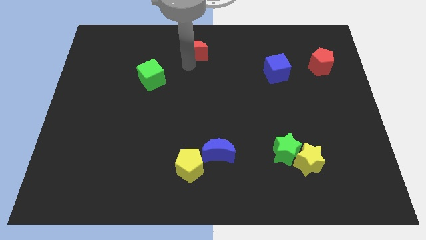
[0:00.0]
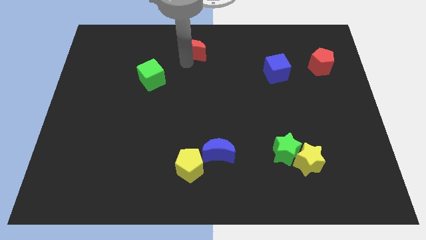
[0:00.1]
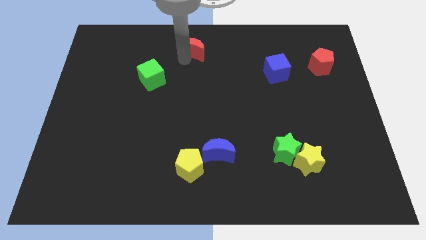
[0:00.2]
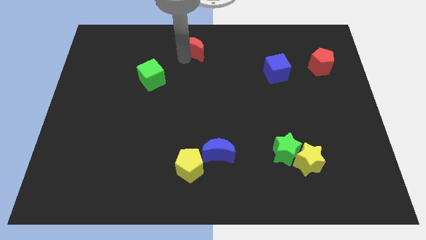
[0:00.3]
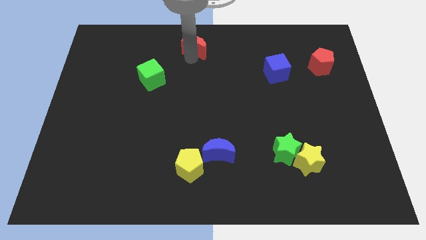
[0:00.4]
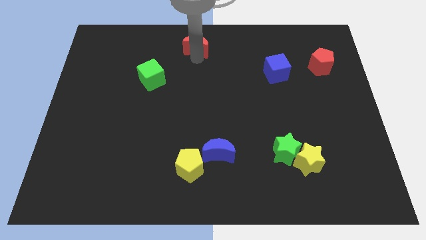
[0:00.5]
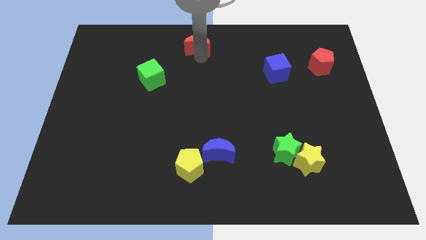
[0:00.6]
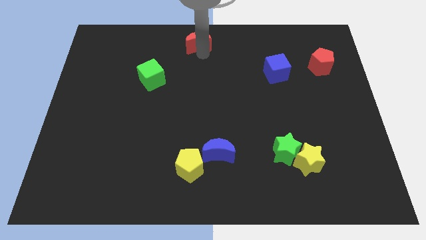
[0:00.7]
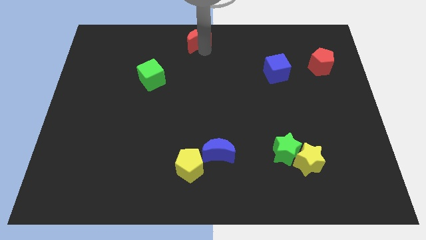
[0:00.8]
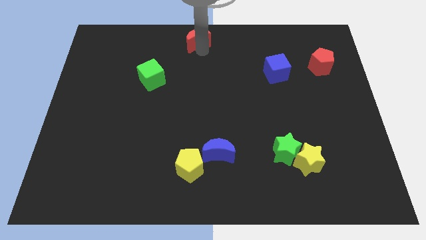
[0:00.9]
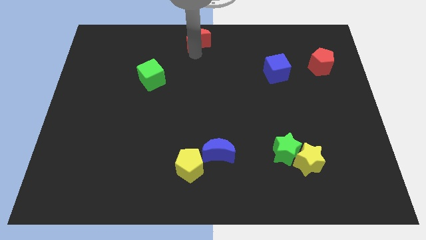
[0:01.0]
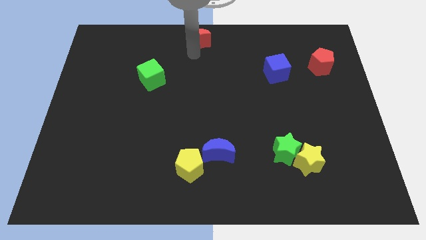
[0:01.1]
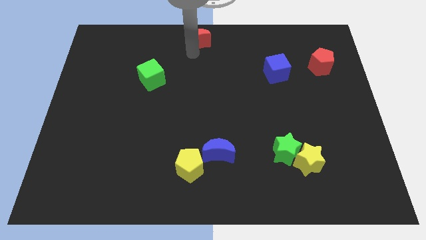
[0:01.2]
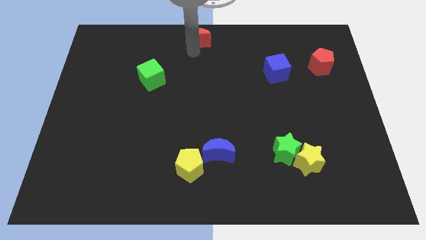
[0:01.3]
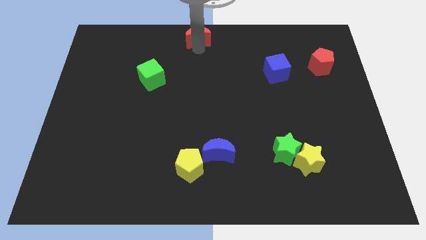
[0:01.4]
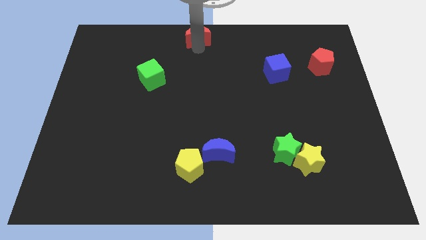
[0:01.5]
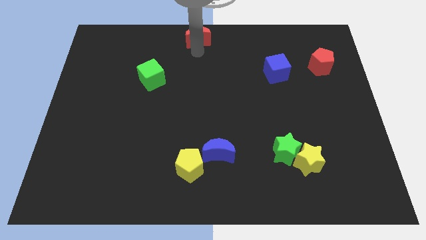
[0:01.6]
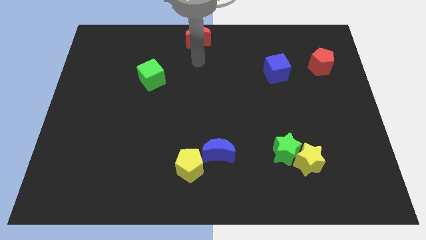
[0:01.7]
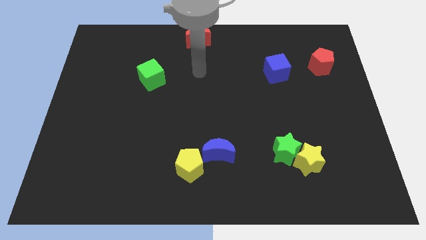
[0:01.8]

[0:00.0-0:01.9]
push the red crescent to the top center of the board

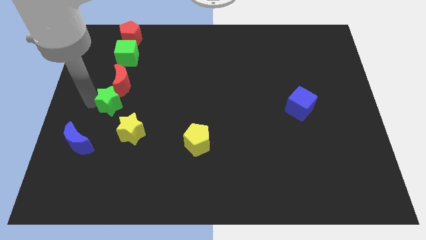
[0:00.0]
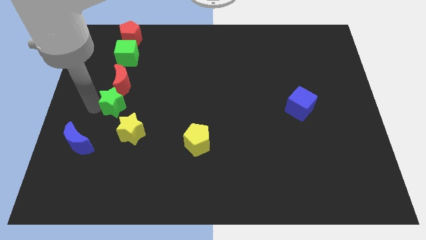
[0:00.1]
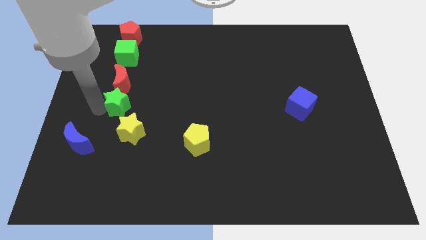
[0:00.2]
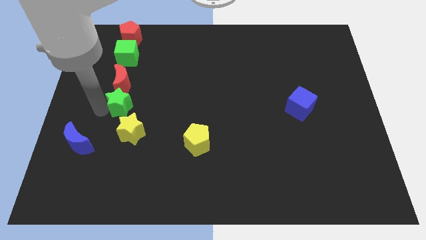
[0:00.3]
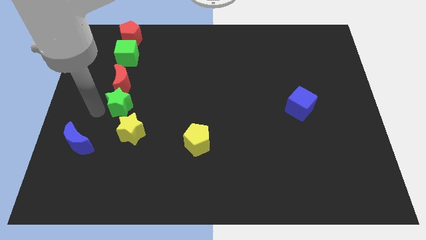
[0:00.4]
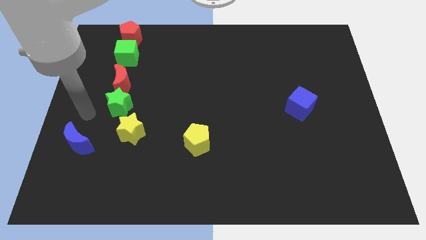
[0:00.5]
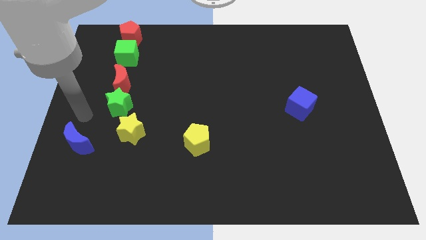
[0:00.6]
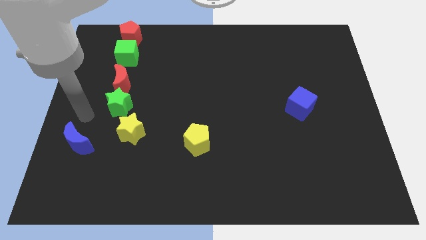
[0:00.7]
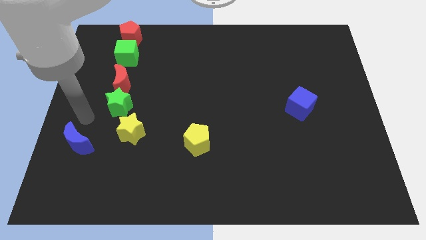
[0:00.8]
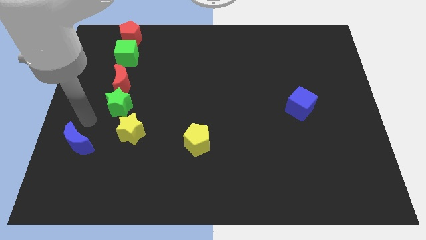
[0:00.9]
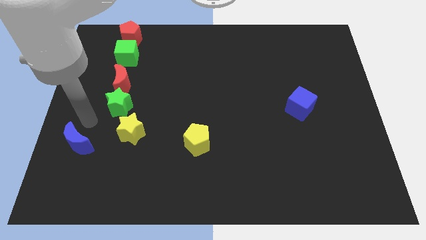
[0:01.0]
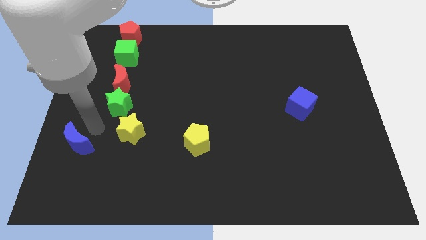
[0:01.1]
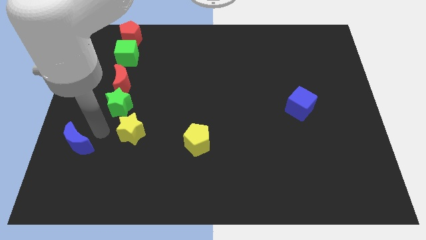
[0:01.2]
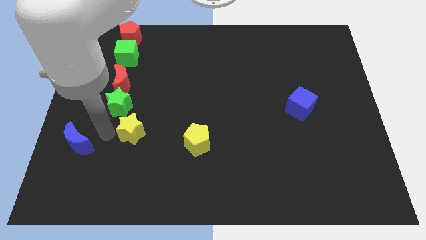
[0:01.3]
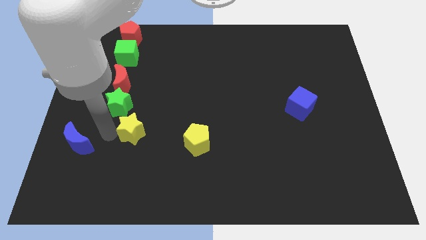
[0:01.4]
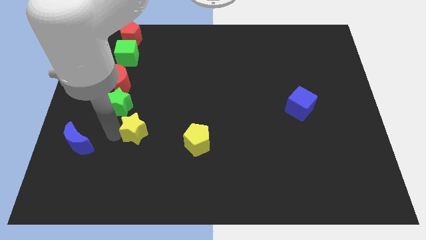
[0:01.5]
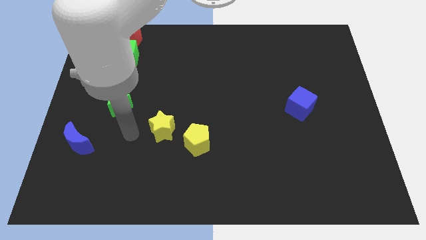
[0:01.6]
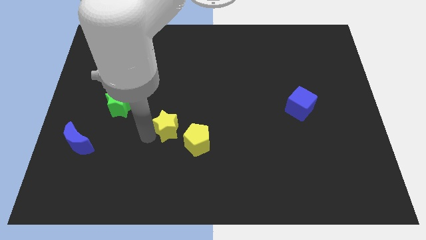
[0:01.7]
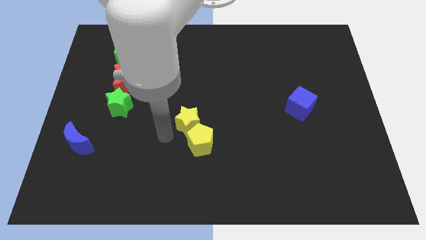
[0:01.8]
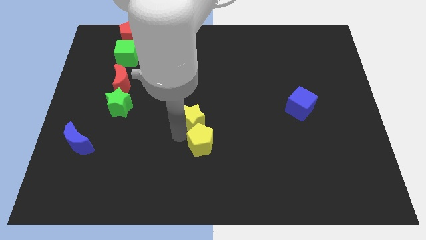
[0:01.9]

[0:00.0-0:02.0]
move the yellow star above the yellow pentagon

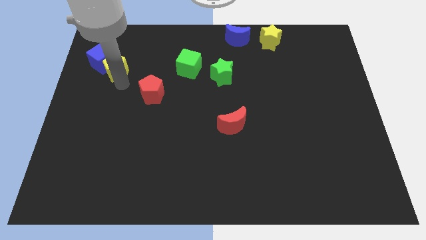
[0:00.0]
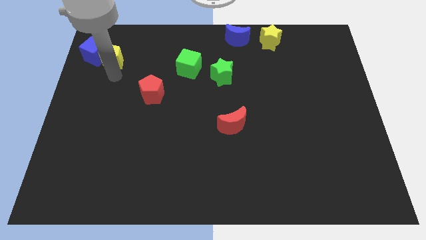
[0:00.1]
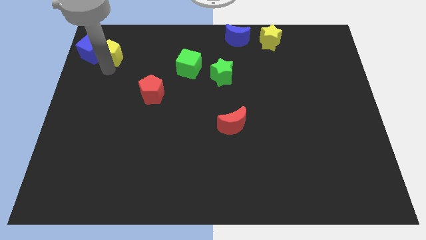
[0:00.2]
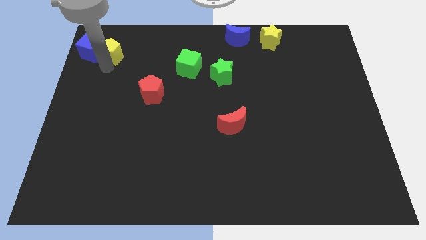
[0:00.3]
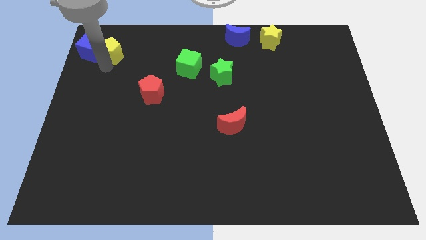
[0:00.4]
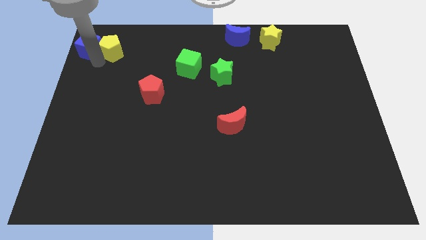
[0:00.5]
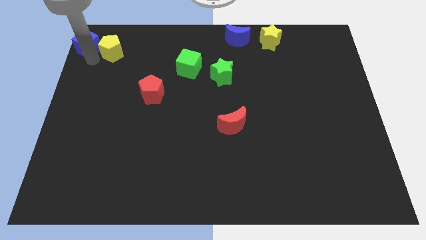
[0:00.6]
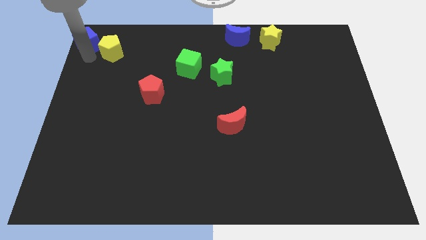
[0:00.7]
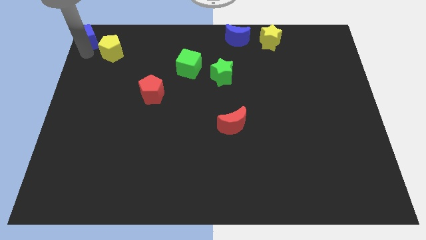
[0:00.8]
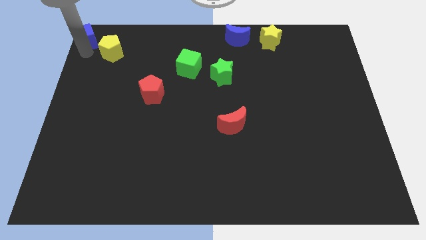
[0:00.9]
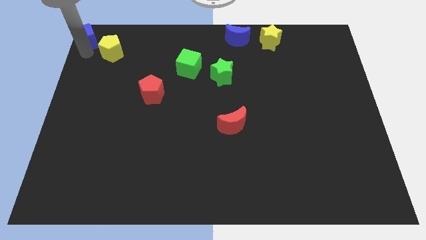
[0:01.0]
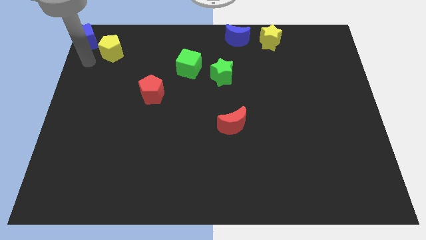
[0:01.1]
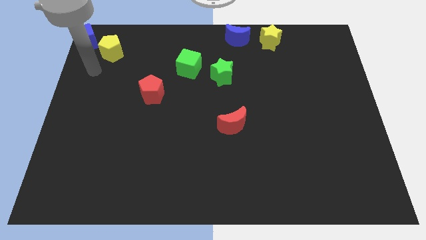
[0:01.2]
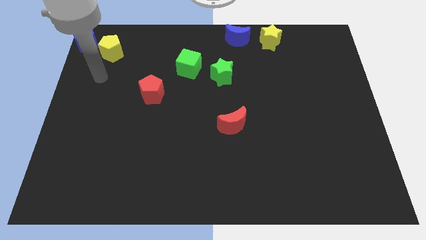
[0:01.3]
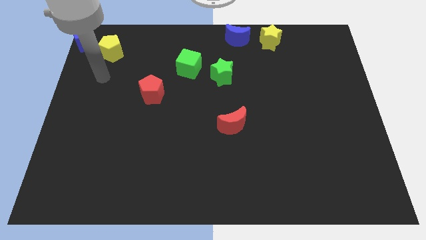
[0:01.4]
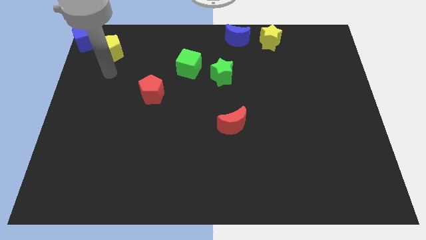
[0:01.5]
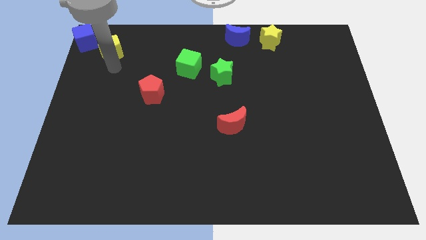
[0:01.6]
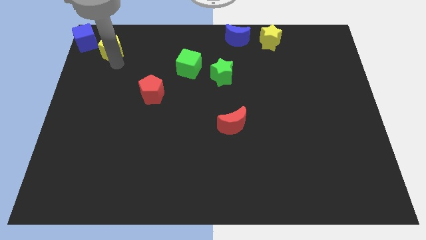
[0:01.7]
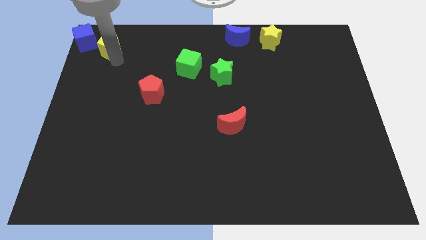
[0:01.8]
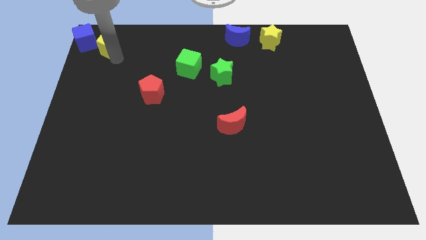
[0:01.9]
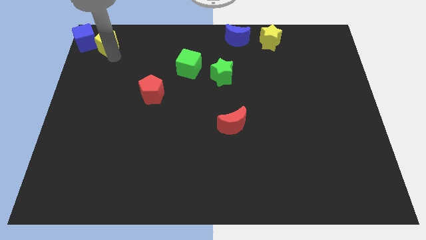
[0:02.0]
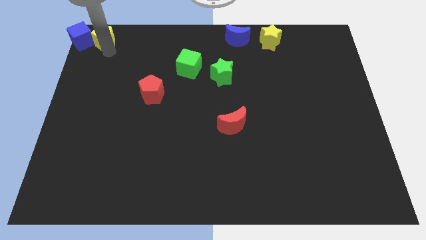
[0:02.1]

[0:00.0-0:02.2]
place the yellow pentagon and the blue cube at the top left corner

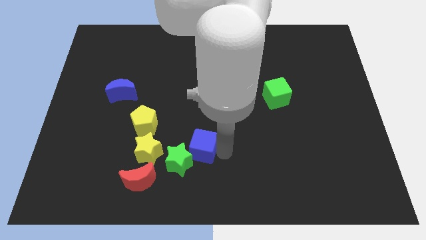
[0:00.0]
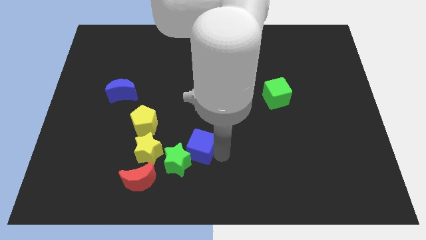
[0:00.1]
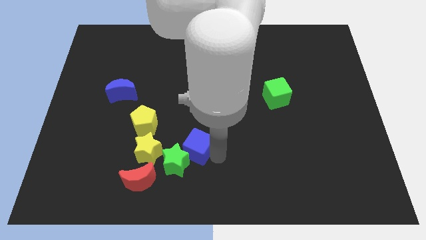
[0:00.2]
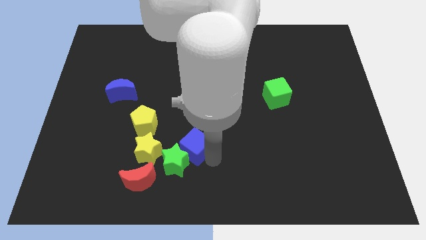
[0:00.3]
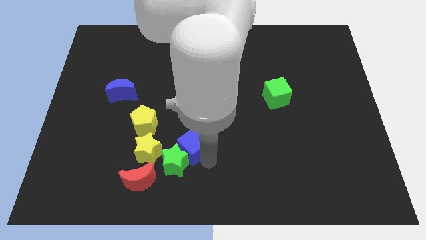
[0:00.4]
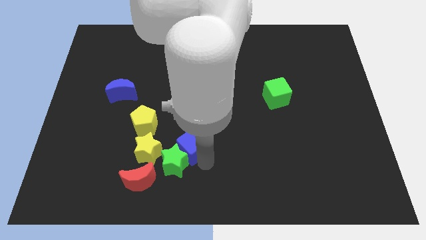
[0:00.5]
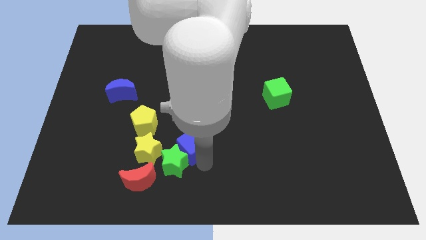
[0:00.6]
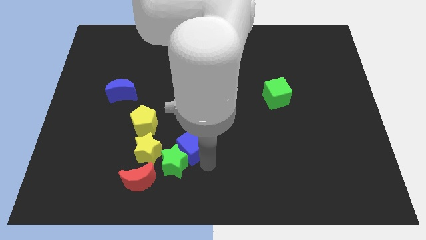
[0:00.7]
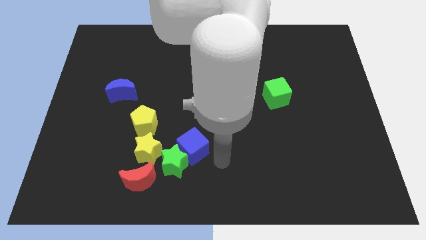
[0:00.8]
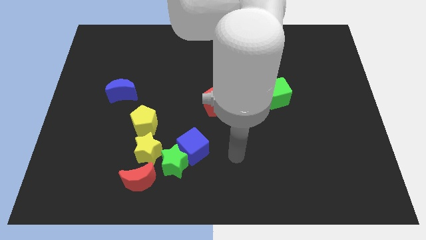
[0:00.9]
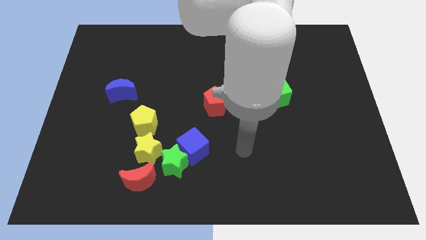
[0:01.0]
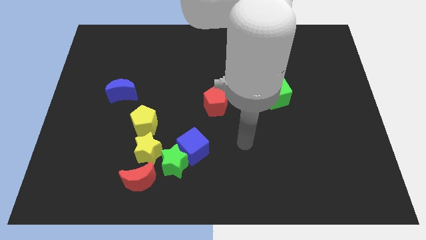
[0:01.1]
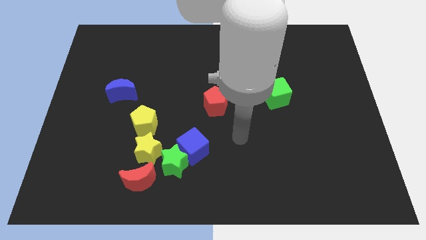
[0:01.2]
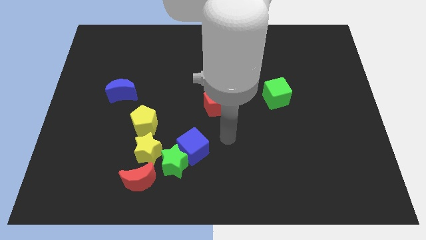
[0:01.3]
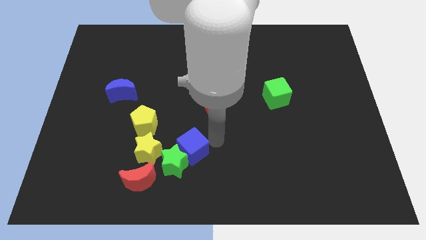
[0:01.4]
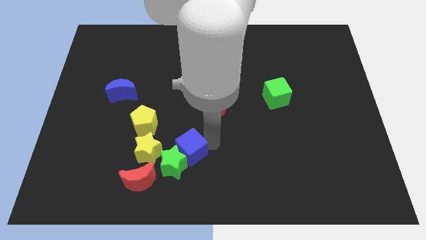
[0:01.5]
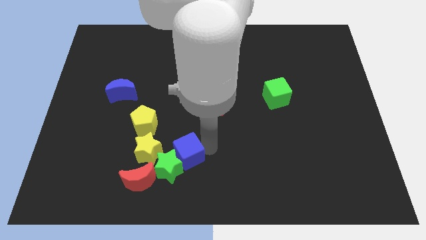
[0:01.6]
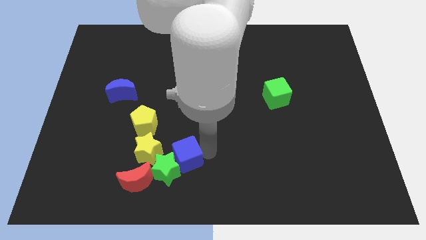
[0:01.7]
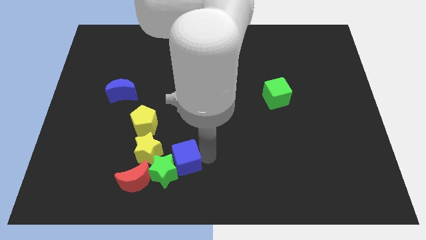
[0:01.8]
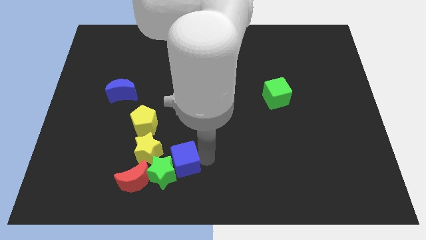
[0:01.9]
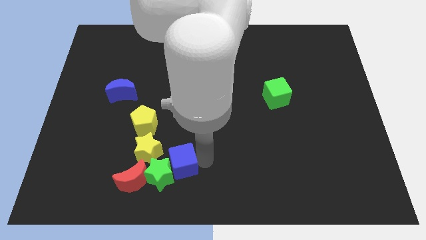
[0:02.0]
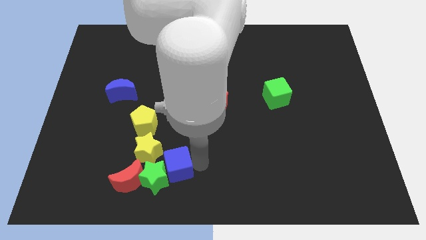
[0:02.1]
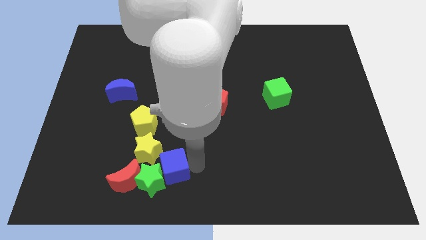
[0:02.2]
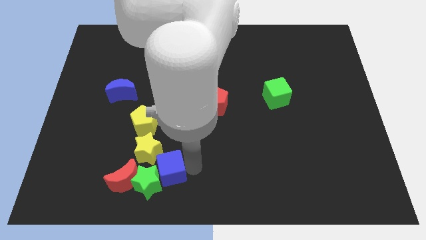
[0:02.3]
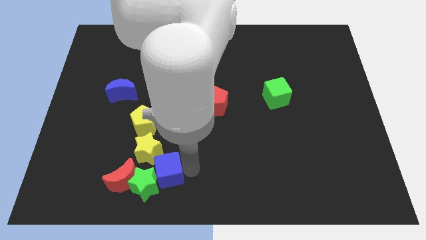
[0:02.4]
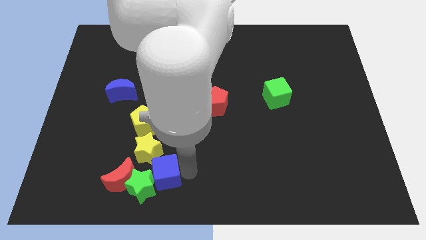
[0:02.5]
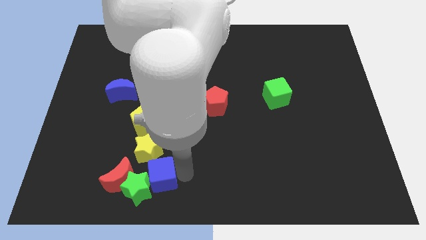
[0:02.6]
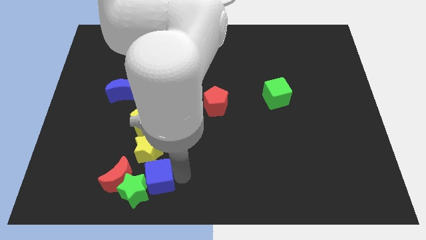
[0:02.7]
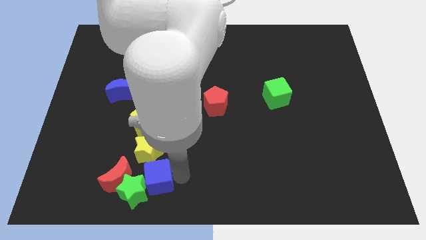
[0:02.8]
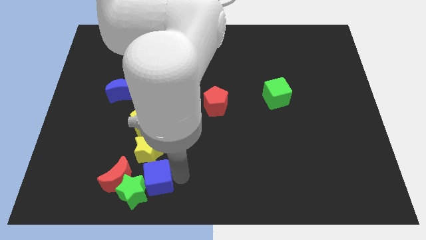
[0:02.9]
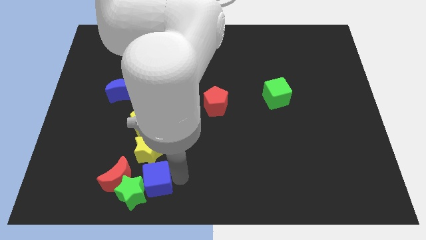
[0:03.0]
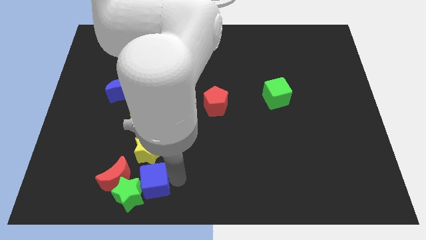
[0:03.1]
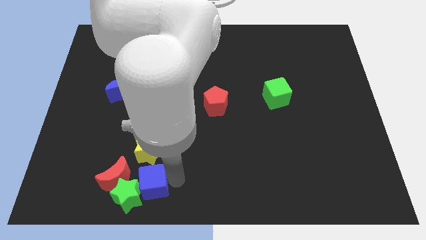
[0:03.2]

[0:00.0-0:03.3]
move blue cube below green star
